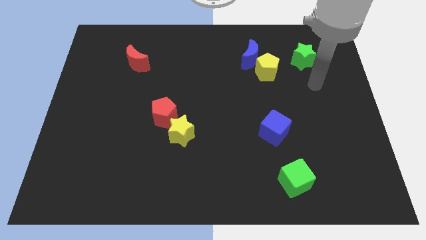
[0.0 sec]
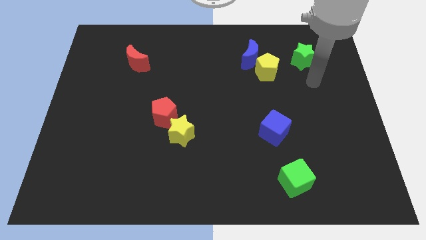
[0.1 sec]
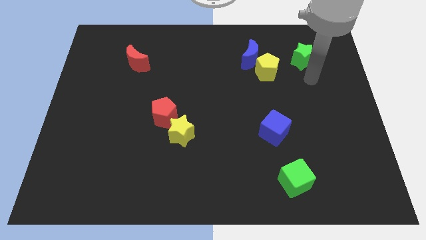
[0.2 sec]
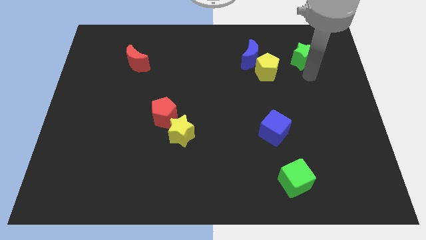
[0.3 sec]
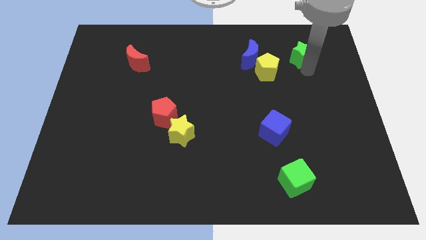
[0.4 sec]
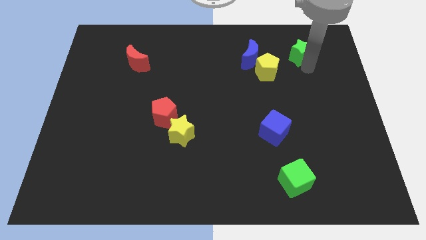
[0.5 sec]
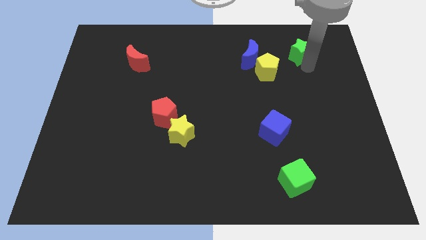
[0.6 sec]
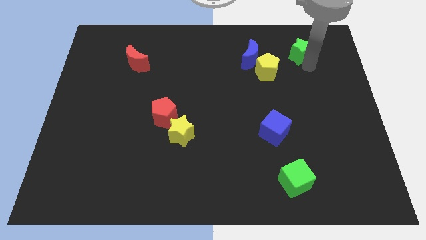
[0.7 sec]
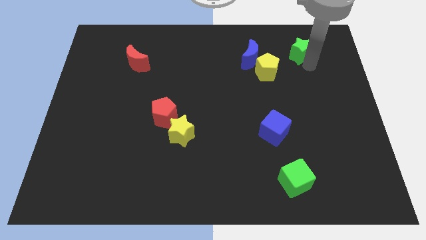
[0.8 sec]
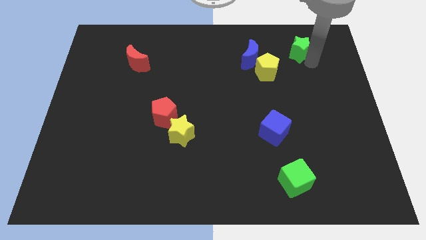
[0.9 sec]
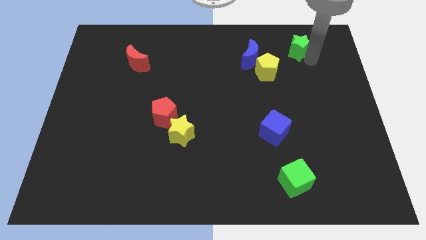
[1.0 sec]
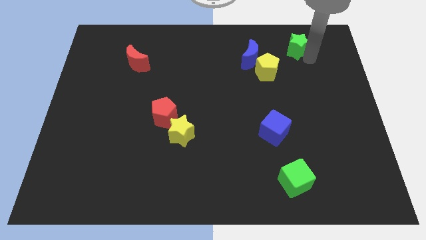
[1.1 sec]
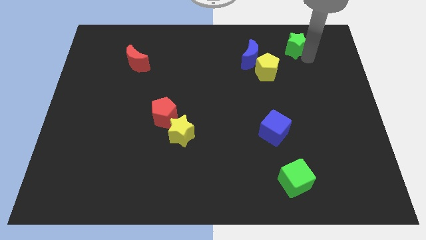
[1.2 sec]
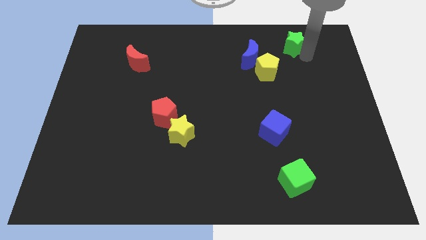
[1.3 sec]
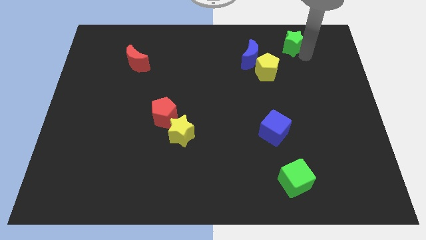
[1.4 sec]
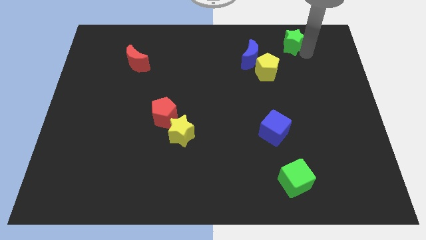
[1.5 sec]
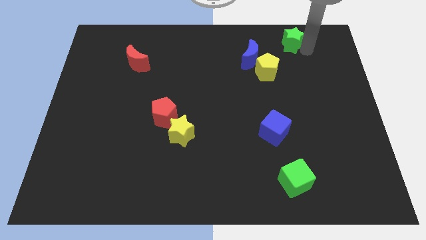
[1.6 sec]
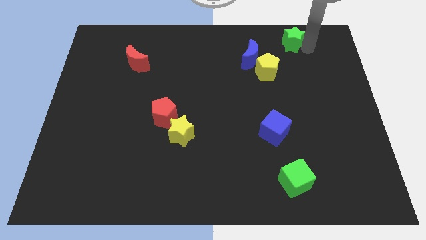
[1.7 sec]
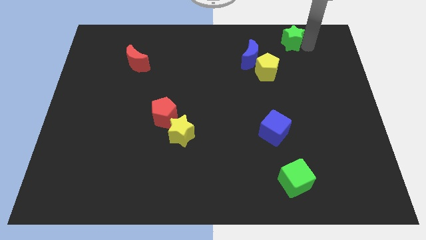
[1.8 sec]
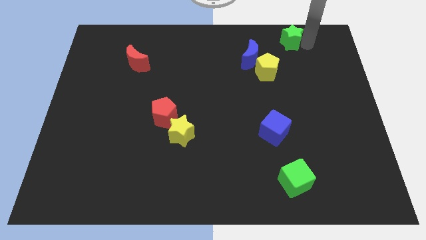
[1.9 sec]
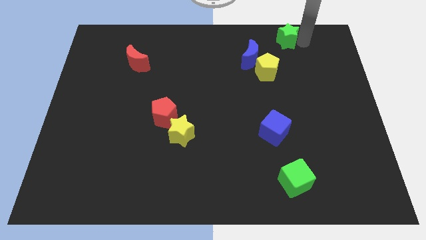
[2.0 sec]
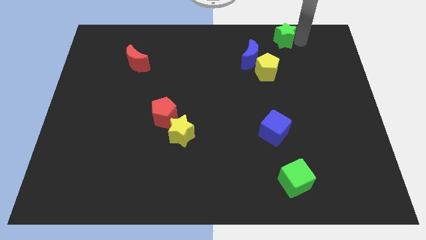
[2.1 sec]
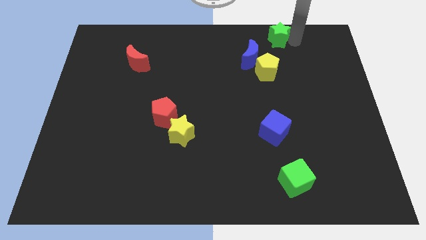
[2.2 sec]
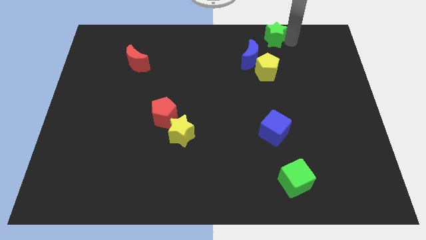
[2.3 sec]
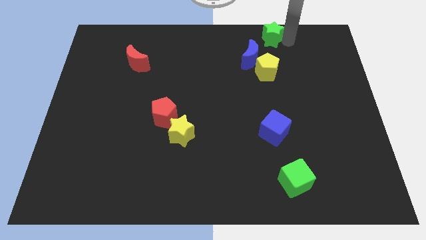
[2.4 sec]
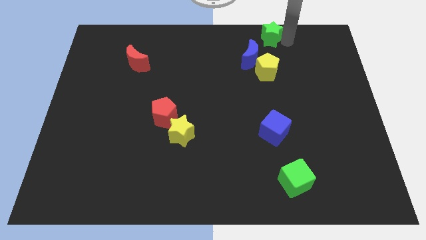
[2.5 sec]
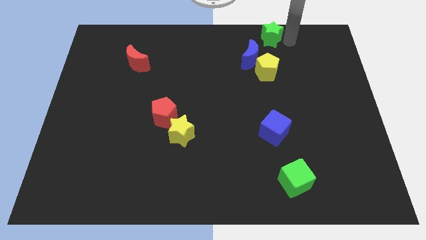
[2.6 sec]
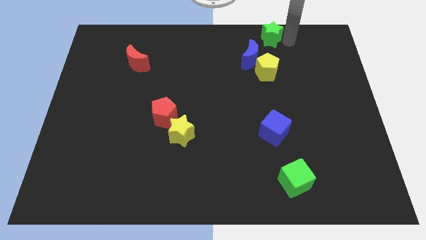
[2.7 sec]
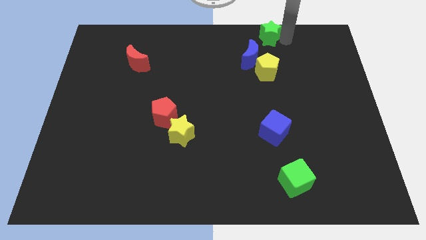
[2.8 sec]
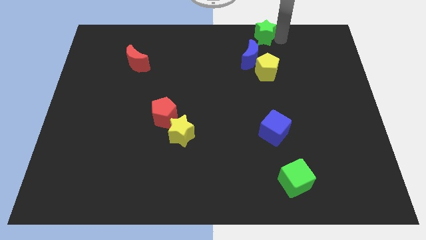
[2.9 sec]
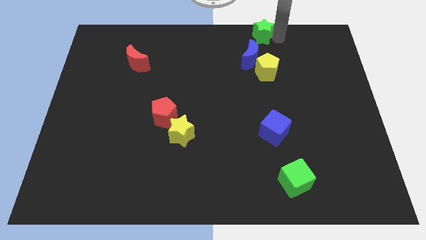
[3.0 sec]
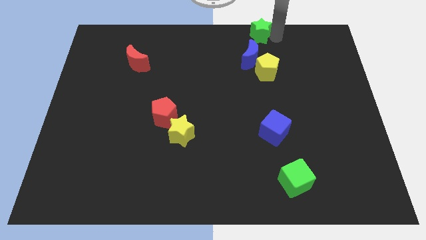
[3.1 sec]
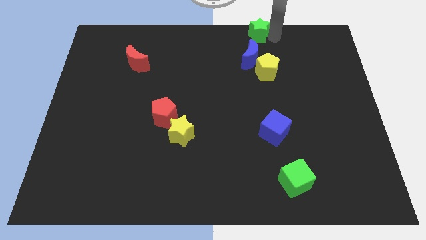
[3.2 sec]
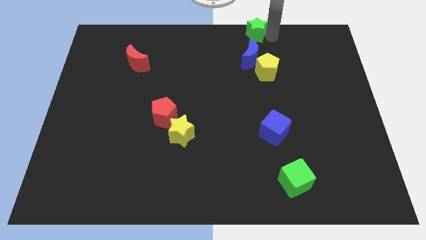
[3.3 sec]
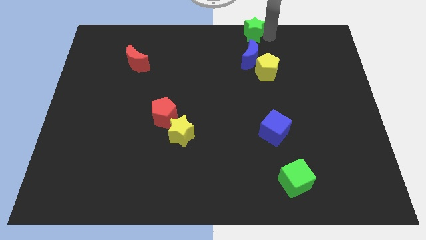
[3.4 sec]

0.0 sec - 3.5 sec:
place the green star at the top of blue crescent

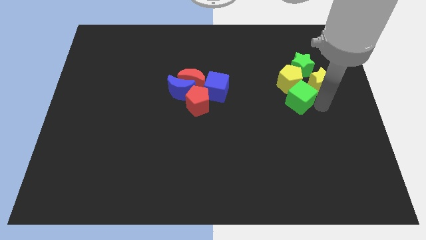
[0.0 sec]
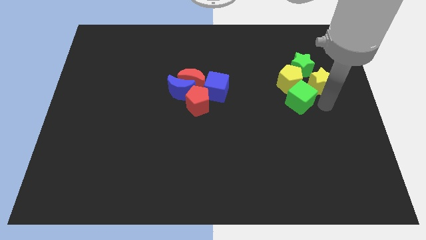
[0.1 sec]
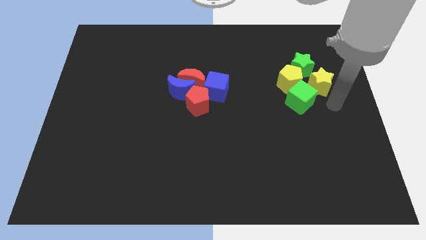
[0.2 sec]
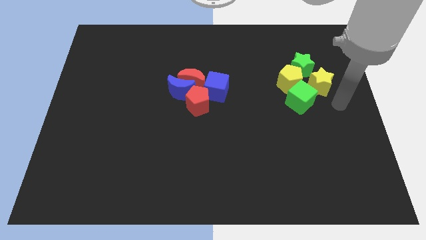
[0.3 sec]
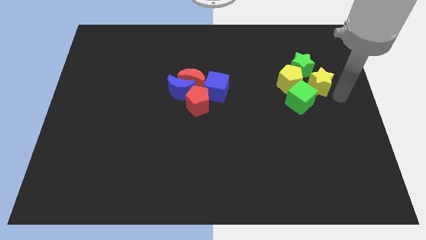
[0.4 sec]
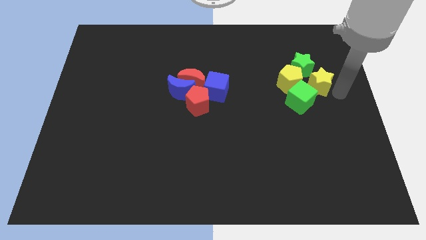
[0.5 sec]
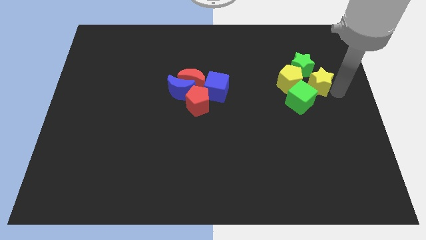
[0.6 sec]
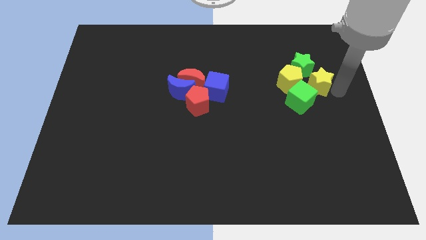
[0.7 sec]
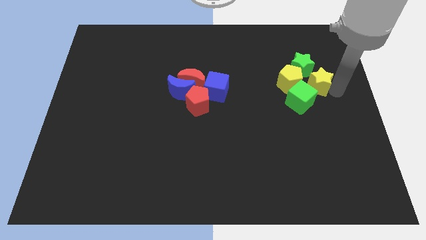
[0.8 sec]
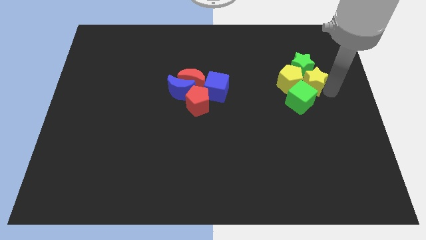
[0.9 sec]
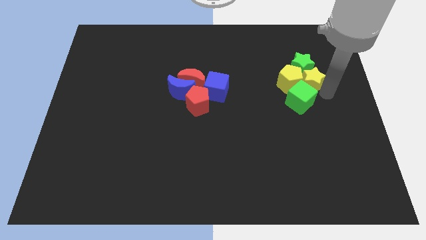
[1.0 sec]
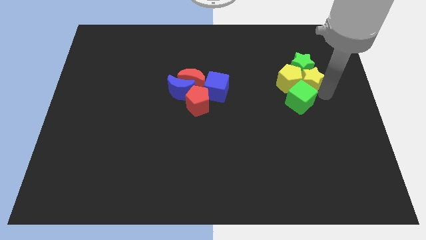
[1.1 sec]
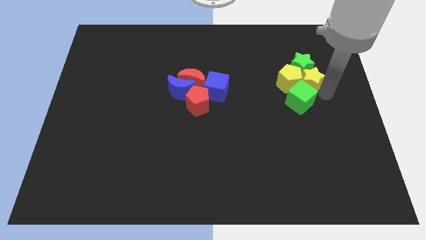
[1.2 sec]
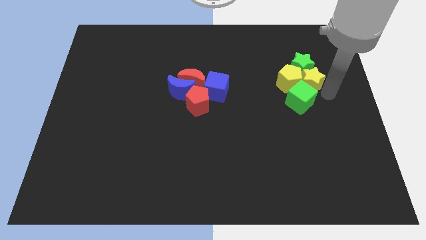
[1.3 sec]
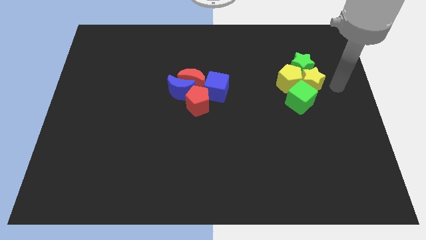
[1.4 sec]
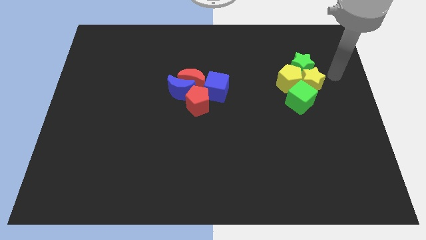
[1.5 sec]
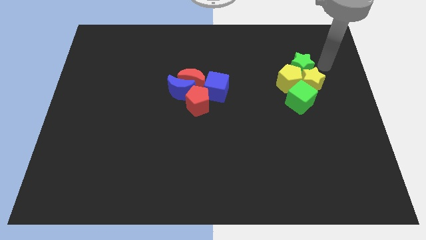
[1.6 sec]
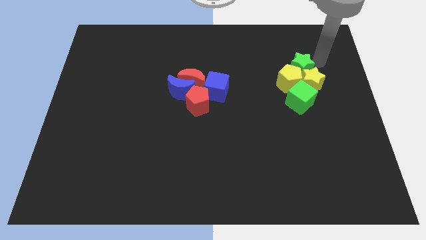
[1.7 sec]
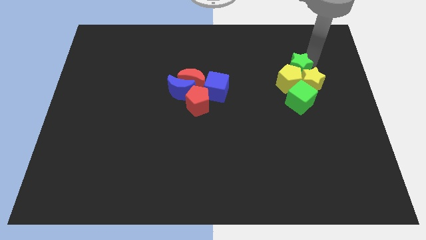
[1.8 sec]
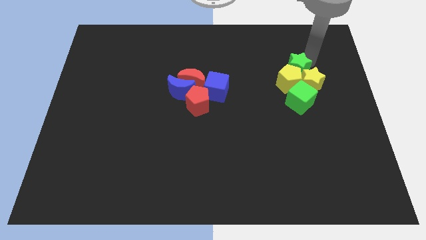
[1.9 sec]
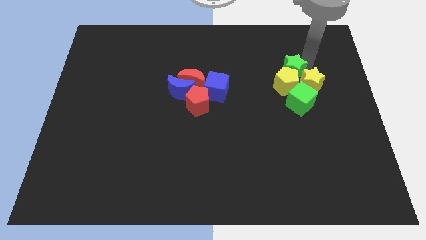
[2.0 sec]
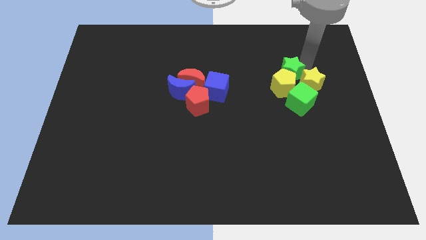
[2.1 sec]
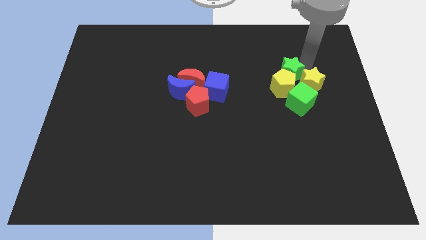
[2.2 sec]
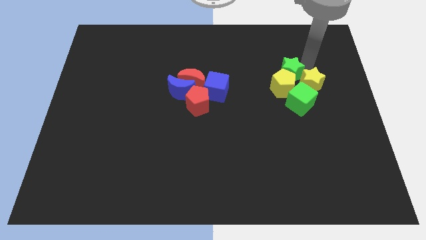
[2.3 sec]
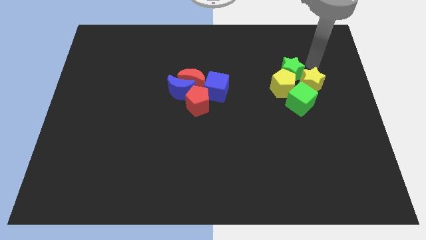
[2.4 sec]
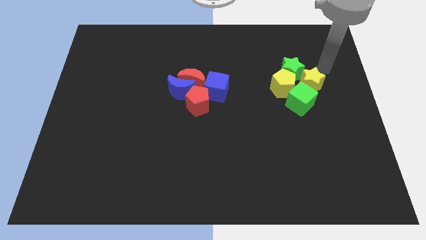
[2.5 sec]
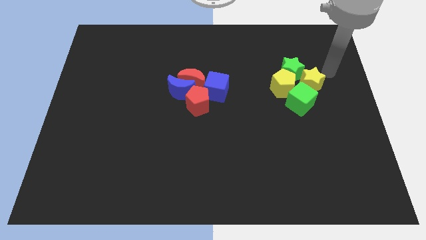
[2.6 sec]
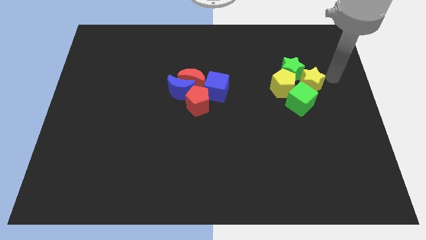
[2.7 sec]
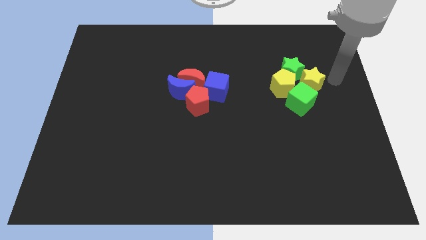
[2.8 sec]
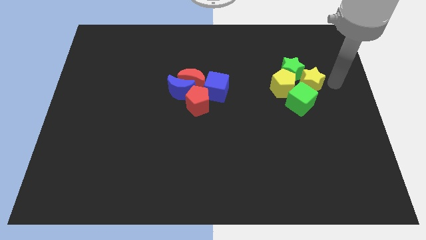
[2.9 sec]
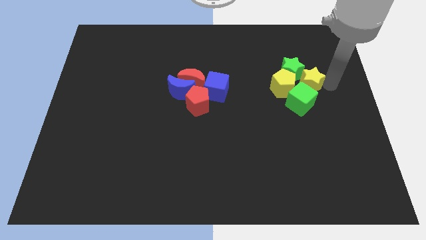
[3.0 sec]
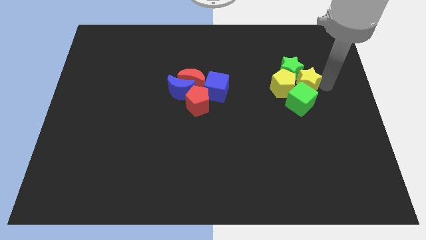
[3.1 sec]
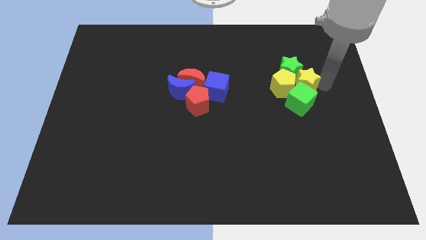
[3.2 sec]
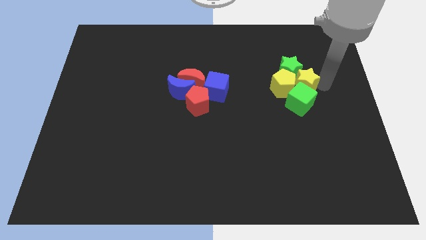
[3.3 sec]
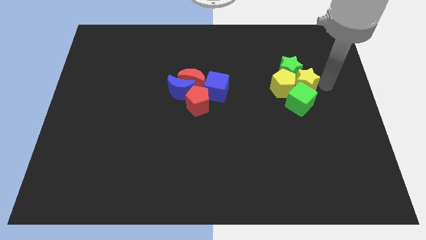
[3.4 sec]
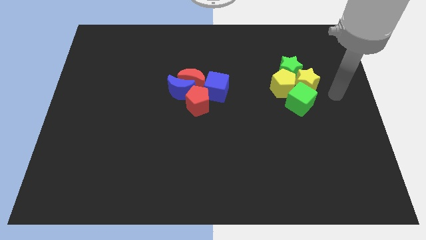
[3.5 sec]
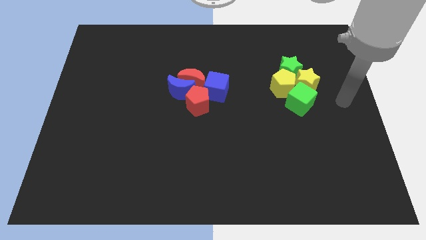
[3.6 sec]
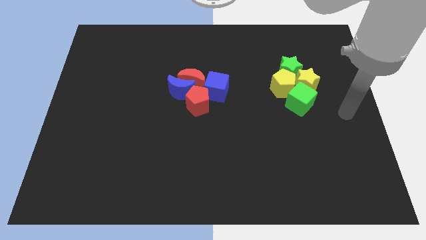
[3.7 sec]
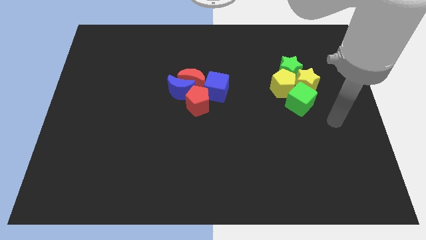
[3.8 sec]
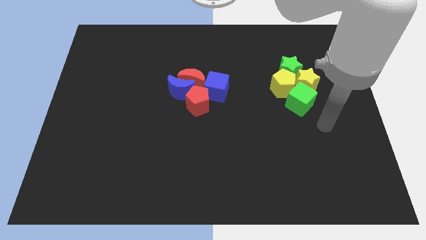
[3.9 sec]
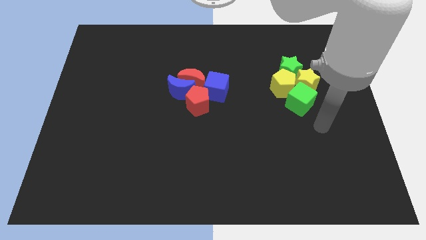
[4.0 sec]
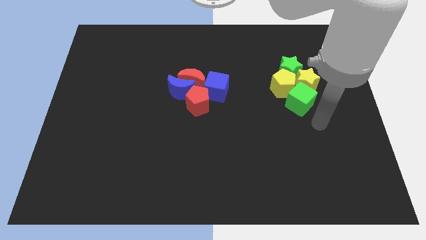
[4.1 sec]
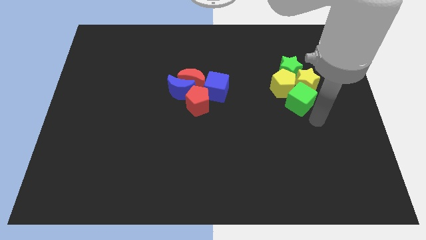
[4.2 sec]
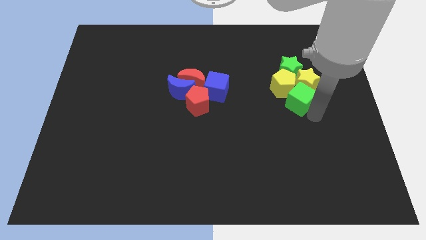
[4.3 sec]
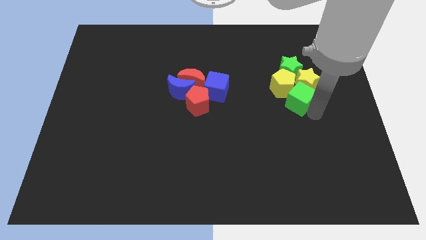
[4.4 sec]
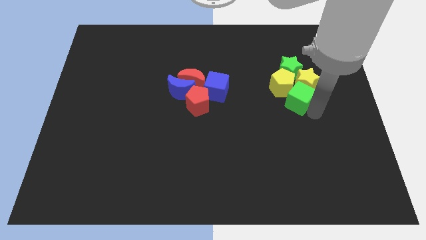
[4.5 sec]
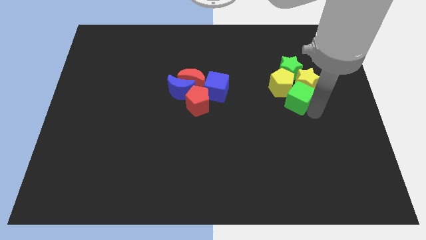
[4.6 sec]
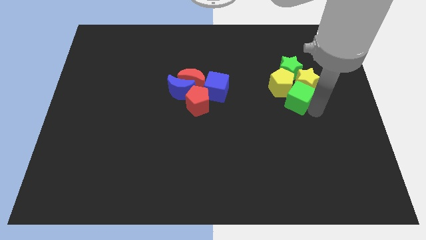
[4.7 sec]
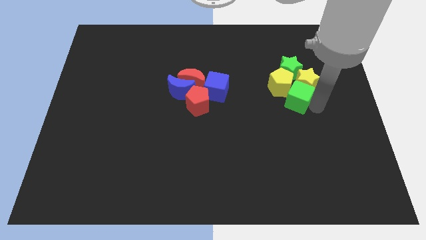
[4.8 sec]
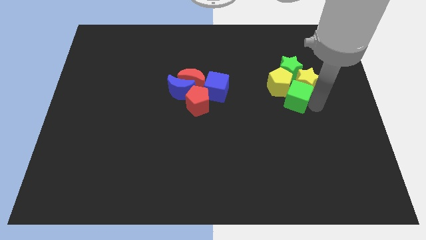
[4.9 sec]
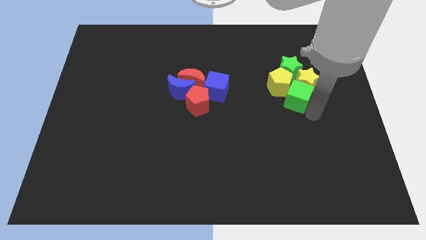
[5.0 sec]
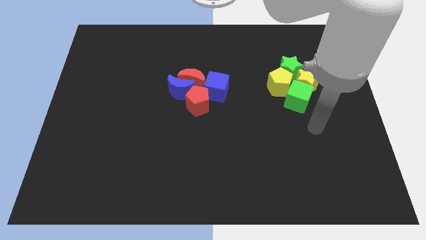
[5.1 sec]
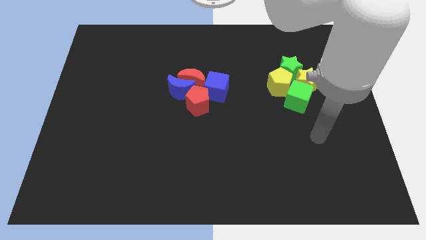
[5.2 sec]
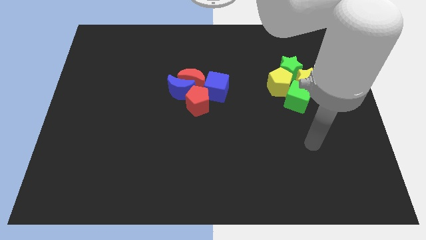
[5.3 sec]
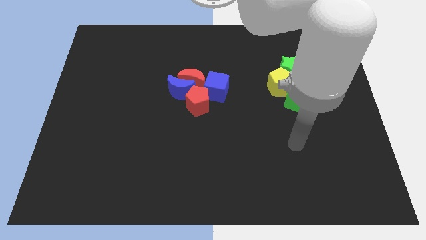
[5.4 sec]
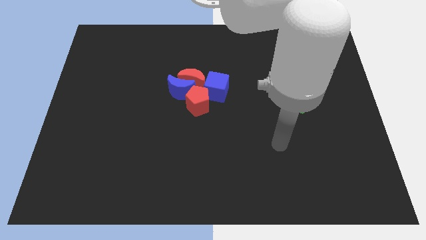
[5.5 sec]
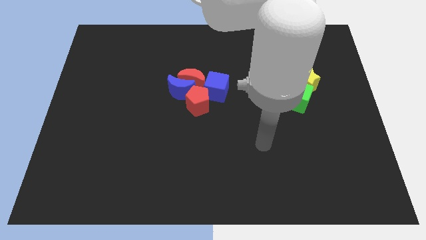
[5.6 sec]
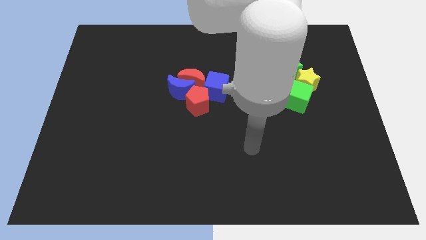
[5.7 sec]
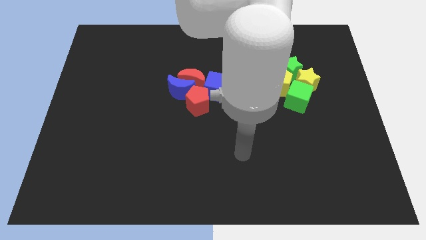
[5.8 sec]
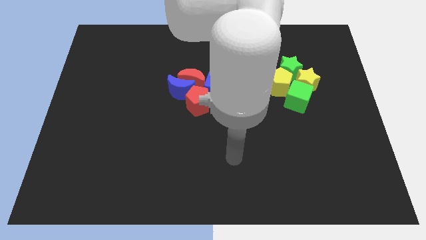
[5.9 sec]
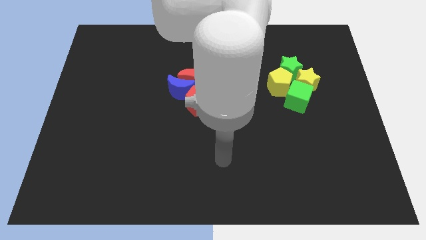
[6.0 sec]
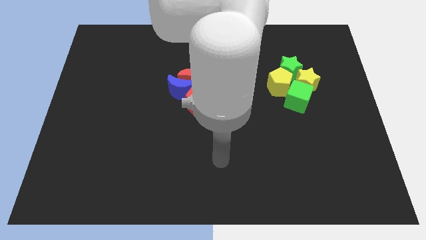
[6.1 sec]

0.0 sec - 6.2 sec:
adjust yellow and green blocks at the right of the board
